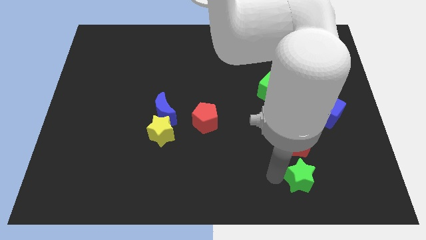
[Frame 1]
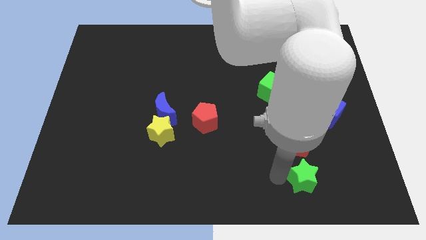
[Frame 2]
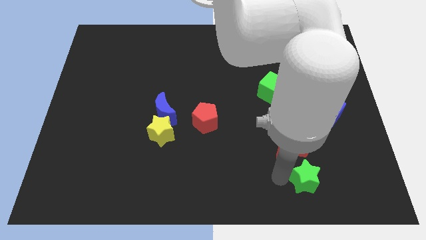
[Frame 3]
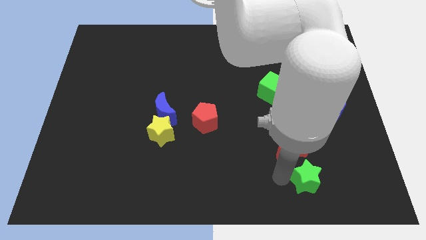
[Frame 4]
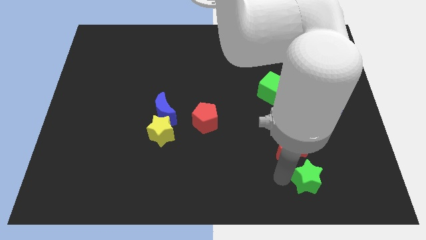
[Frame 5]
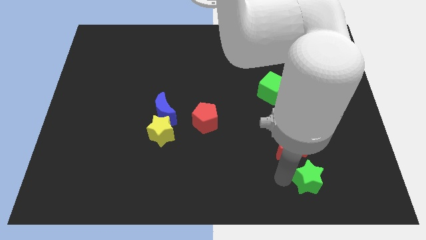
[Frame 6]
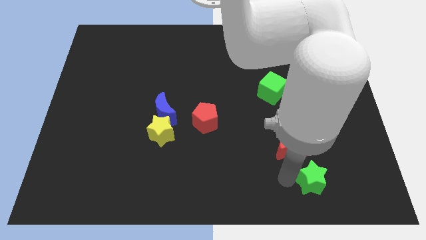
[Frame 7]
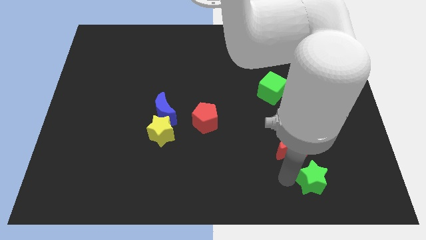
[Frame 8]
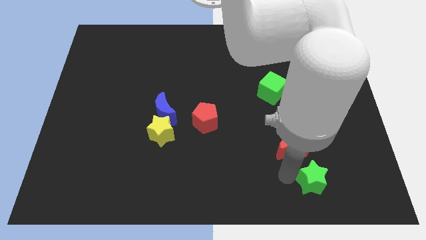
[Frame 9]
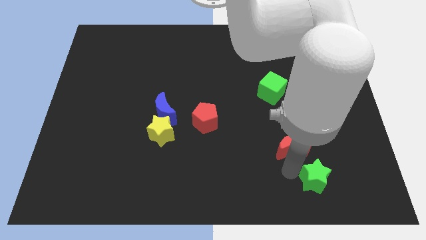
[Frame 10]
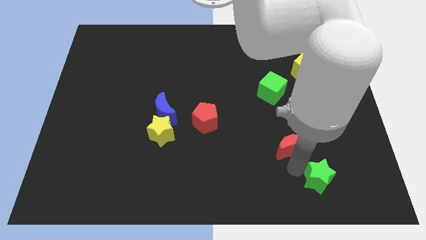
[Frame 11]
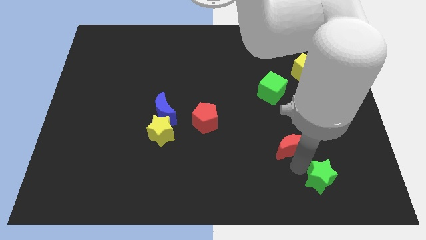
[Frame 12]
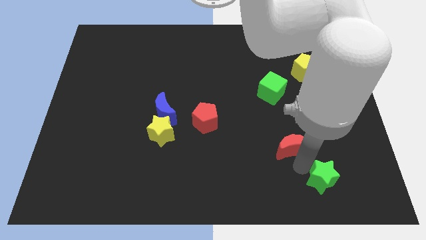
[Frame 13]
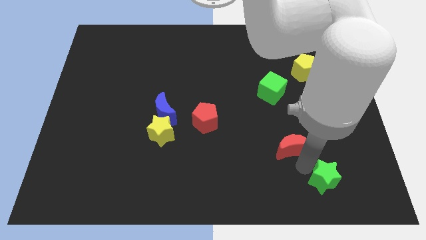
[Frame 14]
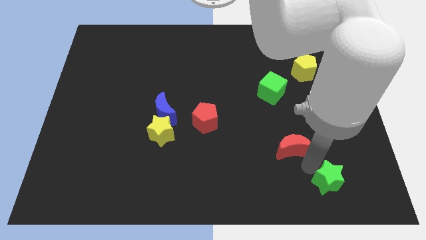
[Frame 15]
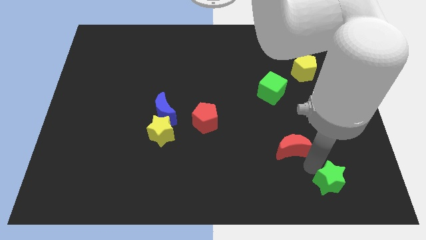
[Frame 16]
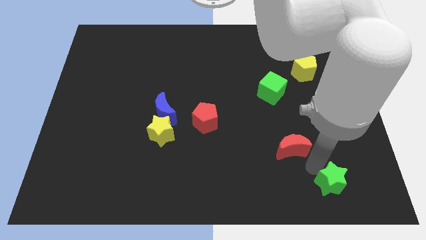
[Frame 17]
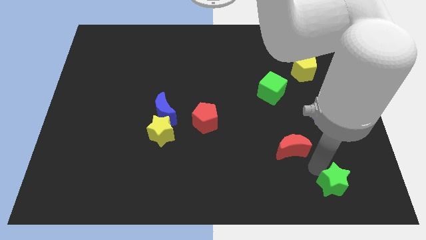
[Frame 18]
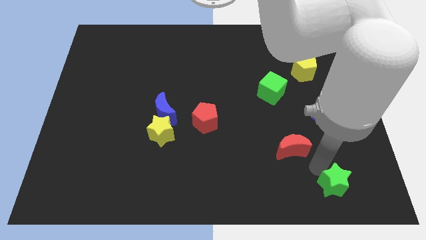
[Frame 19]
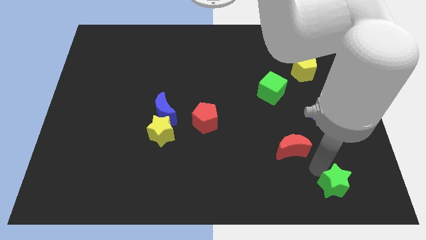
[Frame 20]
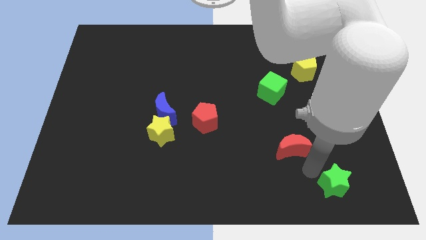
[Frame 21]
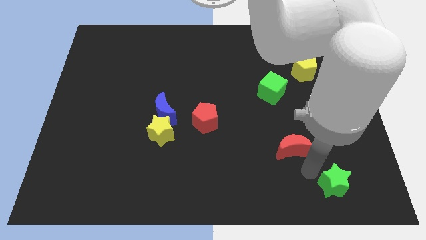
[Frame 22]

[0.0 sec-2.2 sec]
slide green star to the right bottom of red moon

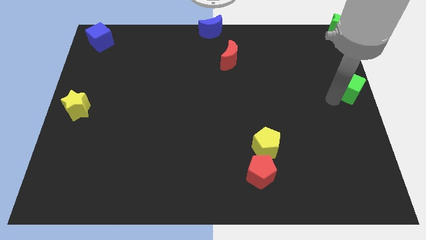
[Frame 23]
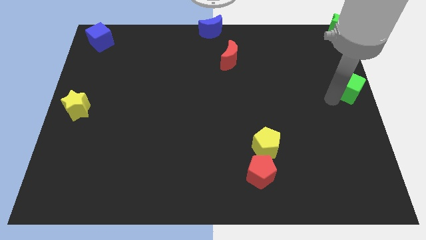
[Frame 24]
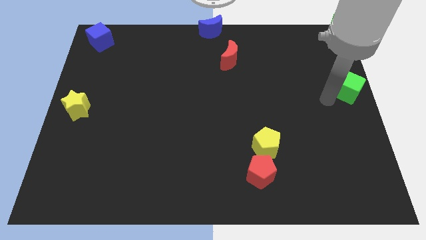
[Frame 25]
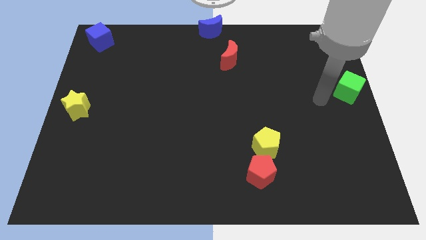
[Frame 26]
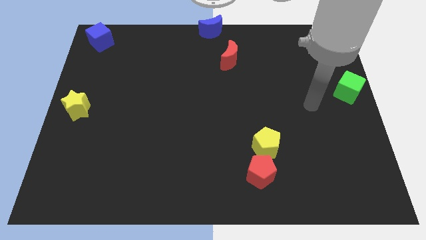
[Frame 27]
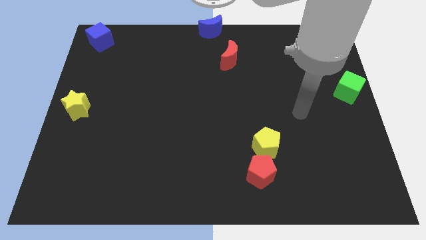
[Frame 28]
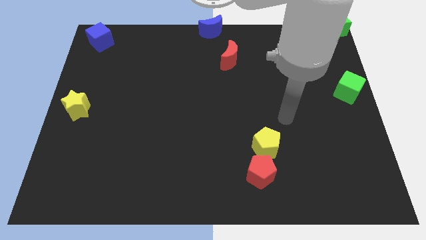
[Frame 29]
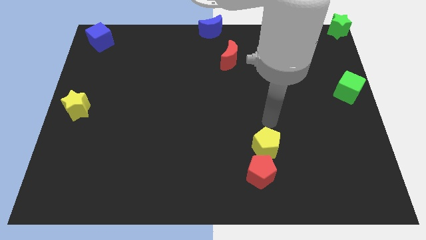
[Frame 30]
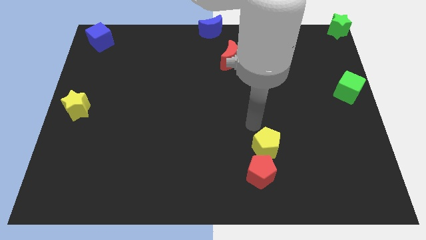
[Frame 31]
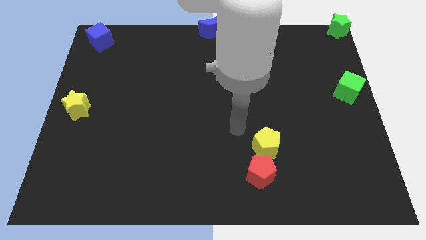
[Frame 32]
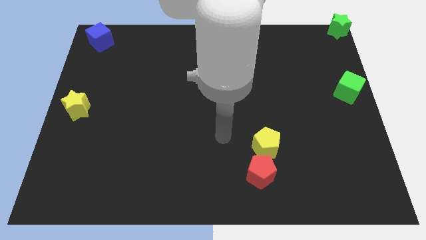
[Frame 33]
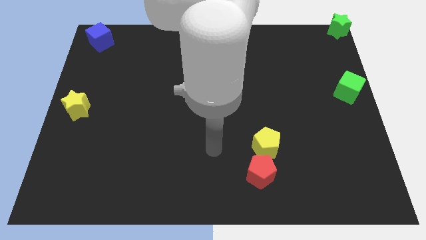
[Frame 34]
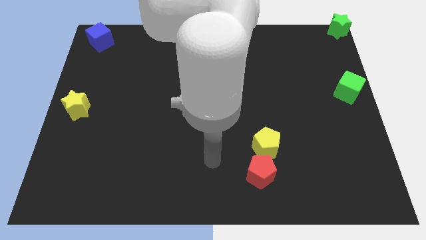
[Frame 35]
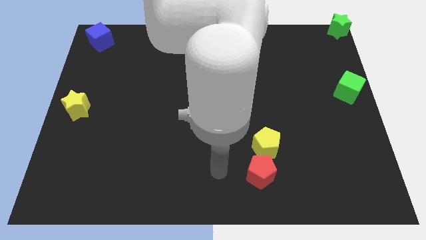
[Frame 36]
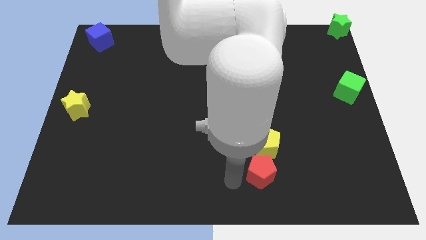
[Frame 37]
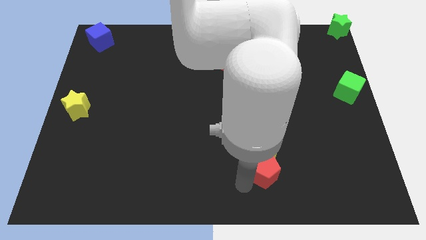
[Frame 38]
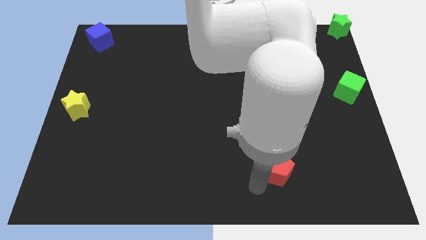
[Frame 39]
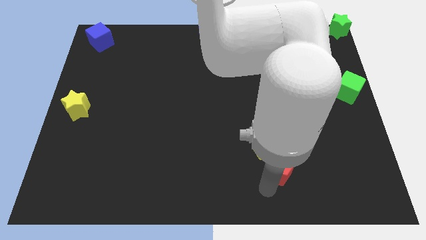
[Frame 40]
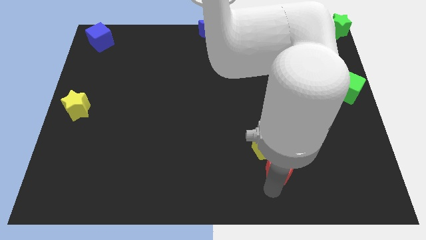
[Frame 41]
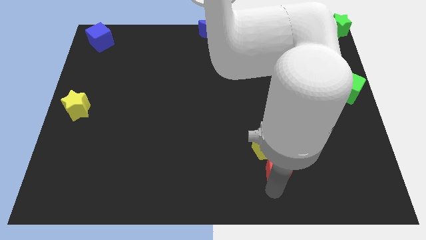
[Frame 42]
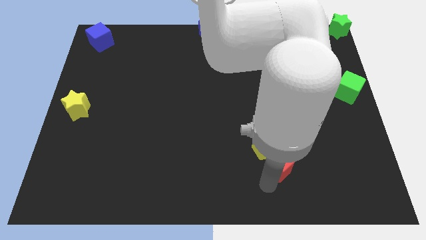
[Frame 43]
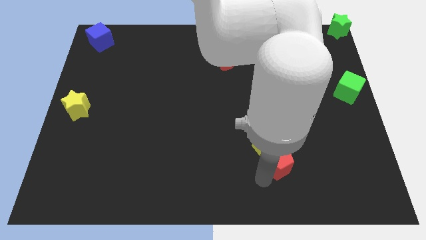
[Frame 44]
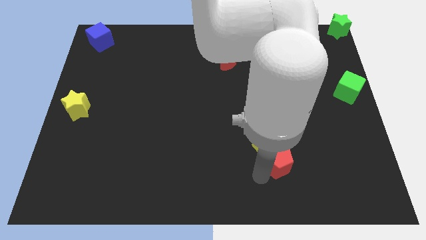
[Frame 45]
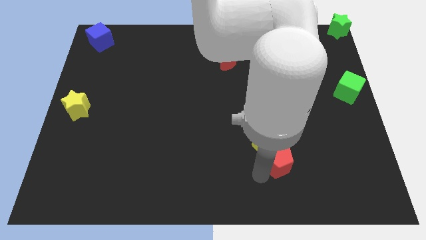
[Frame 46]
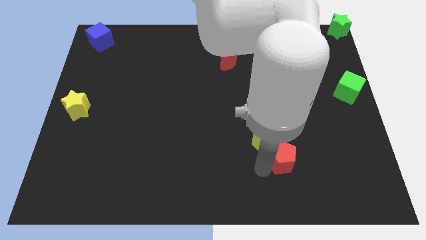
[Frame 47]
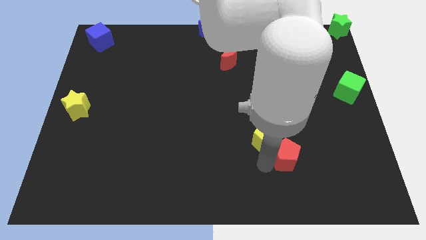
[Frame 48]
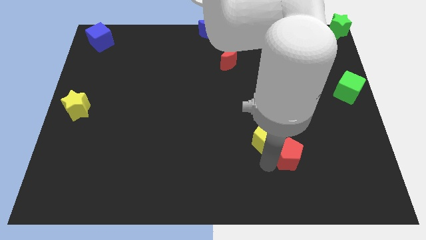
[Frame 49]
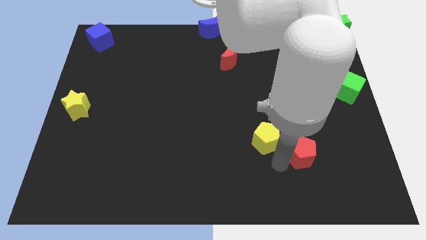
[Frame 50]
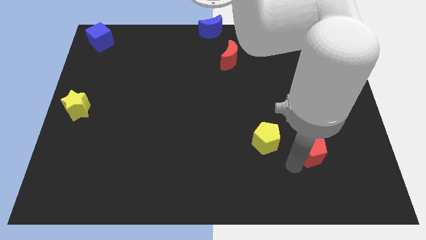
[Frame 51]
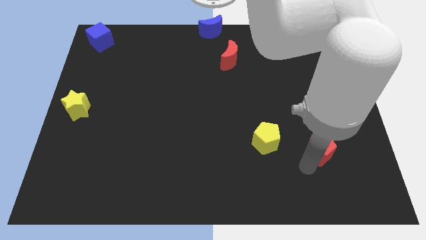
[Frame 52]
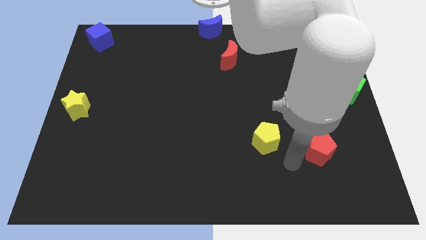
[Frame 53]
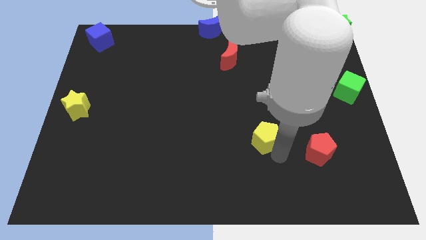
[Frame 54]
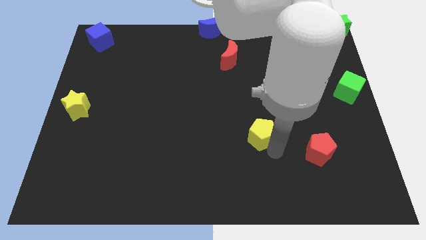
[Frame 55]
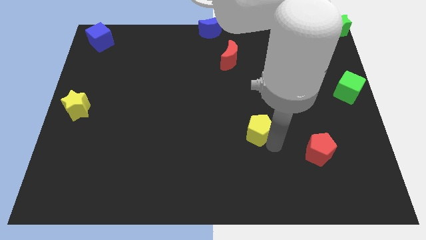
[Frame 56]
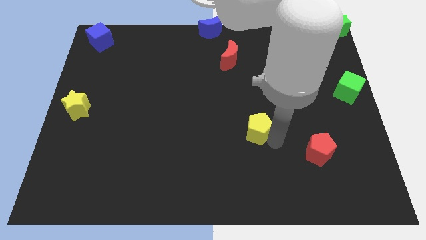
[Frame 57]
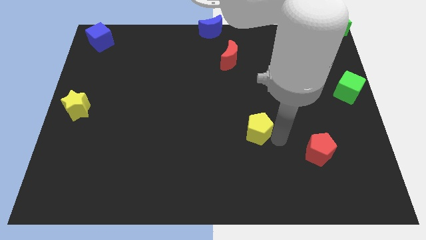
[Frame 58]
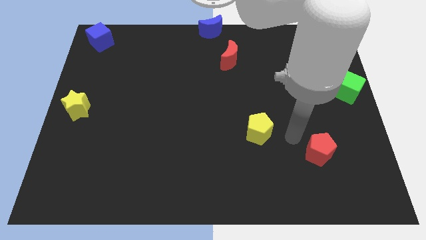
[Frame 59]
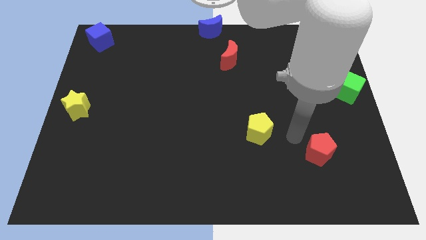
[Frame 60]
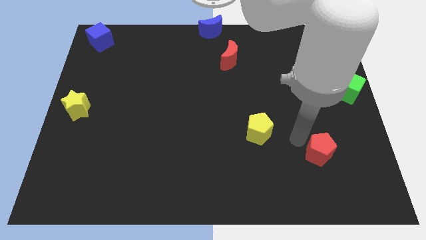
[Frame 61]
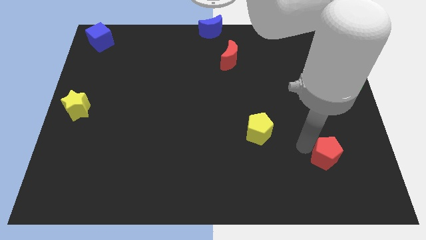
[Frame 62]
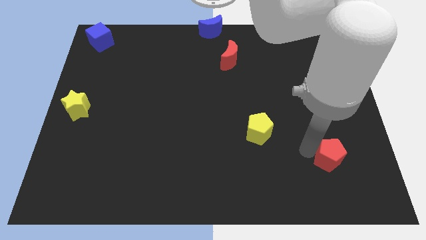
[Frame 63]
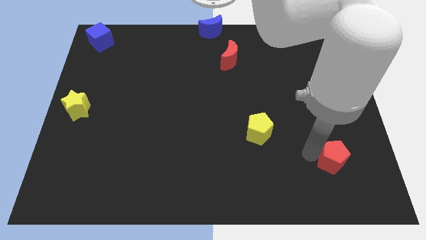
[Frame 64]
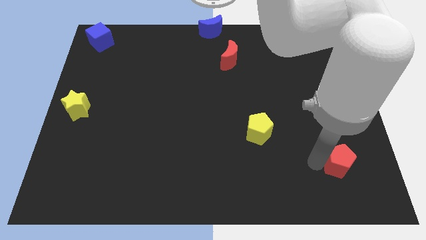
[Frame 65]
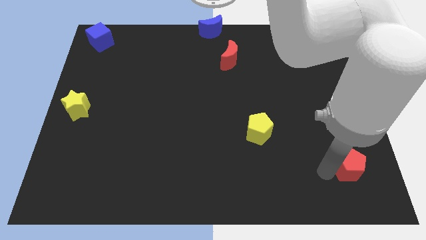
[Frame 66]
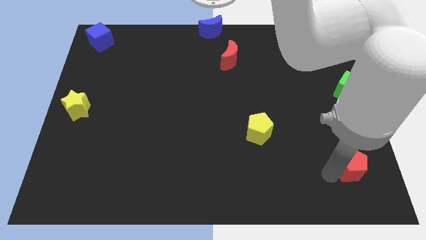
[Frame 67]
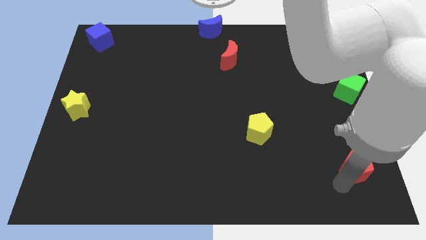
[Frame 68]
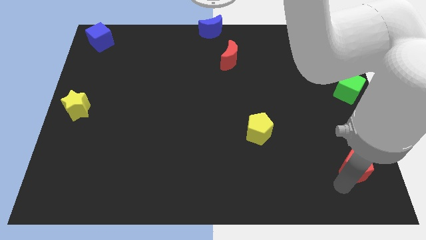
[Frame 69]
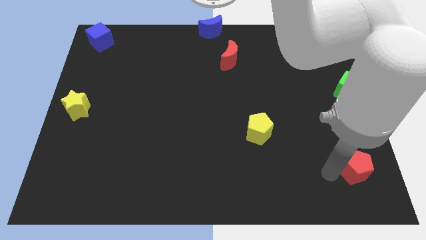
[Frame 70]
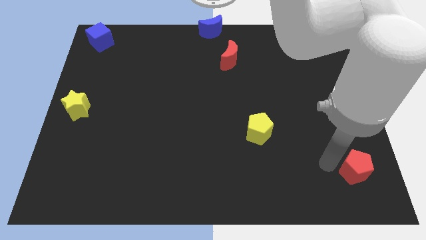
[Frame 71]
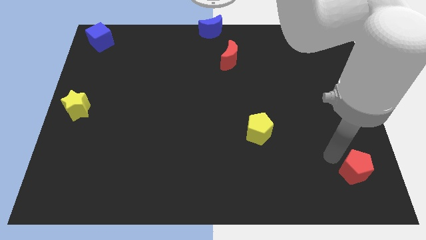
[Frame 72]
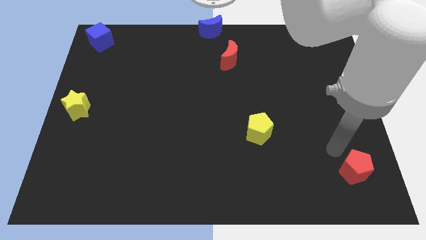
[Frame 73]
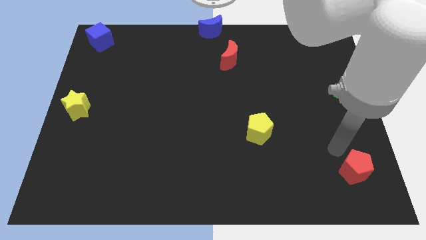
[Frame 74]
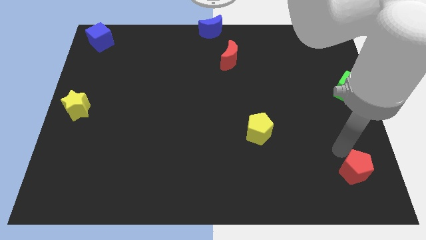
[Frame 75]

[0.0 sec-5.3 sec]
separate red pentagon from yellow pentagon

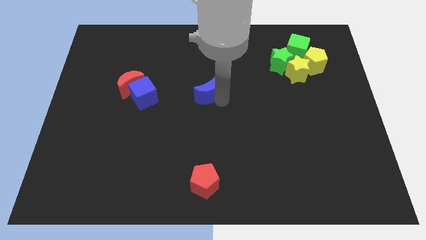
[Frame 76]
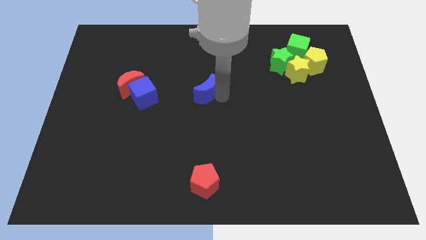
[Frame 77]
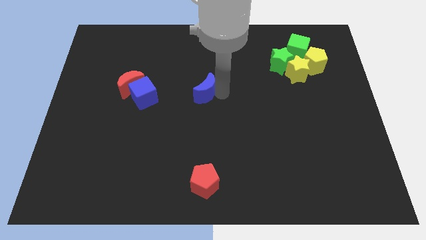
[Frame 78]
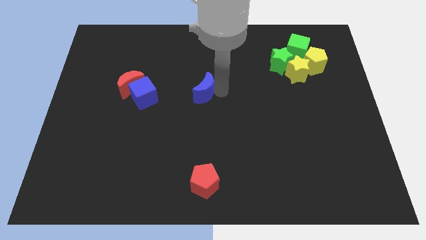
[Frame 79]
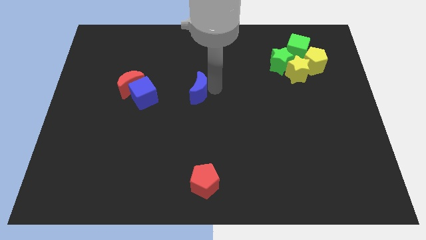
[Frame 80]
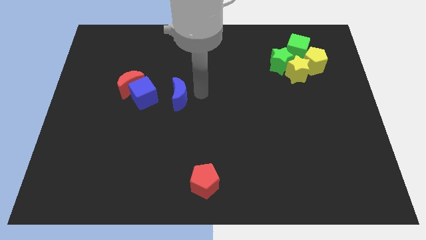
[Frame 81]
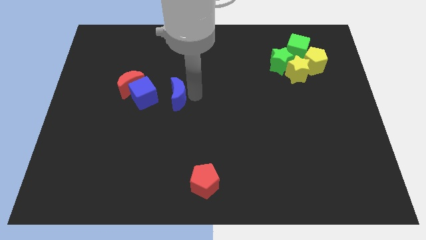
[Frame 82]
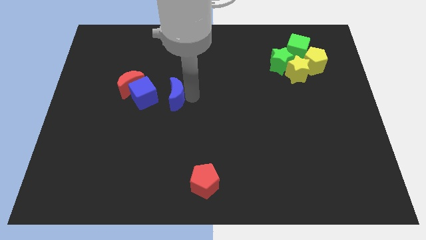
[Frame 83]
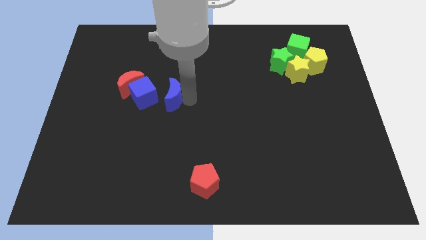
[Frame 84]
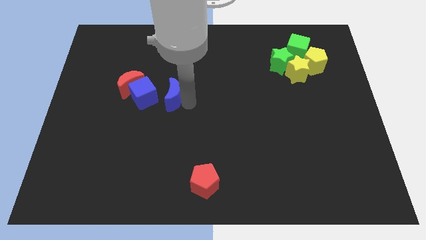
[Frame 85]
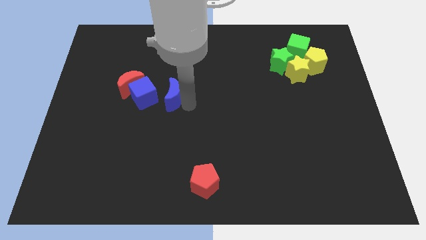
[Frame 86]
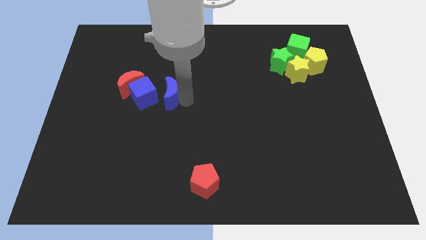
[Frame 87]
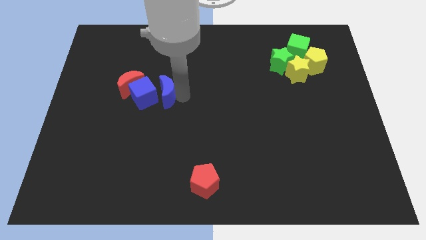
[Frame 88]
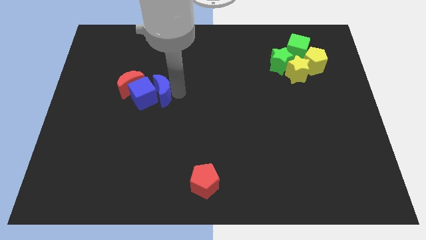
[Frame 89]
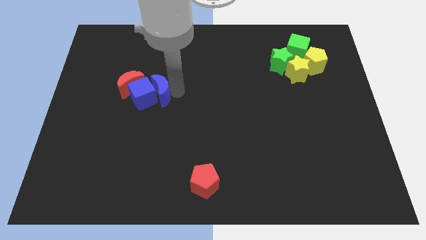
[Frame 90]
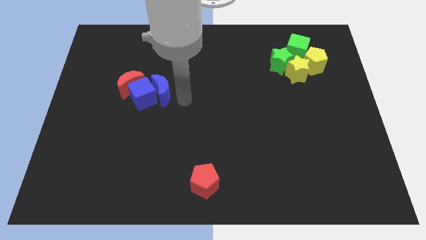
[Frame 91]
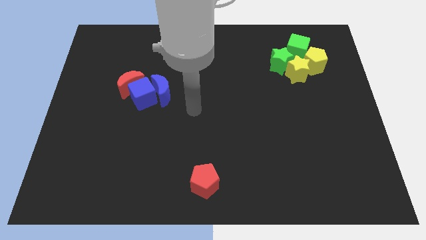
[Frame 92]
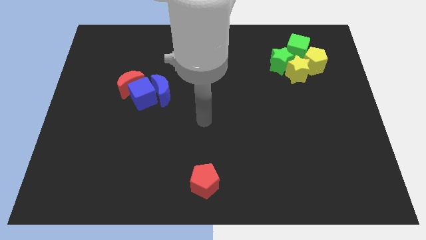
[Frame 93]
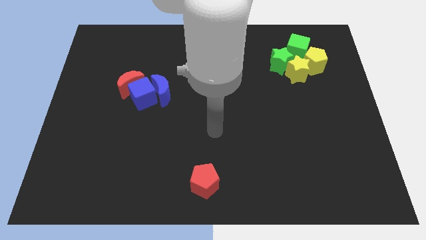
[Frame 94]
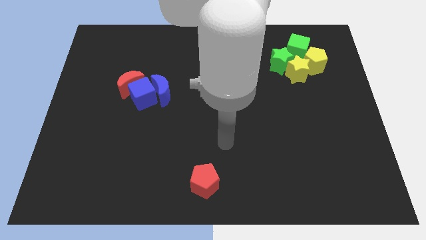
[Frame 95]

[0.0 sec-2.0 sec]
place the blue moon to the right of the blue cube
